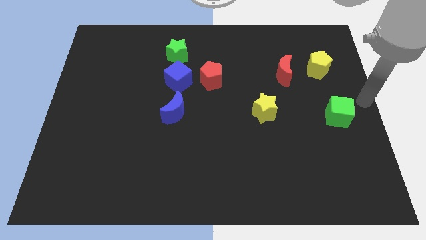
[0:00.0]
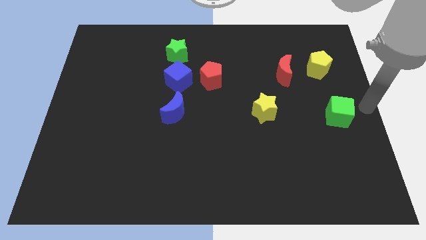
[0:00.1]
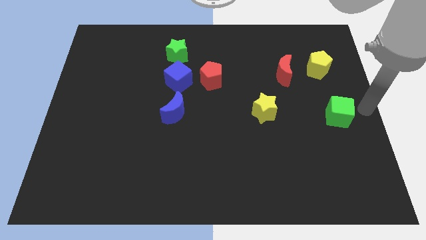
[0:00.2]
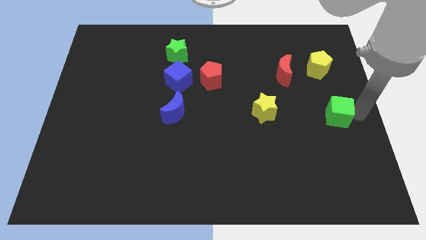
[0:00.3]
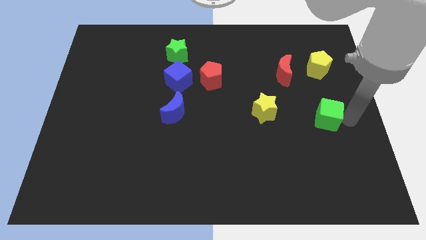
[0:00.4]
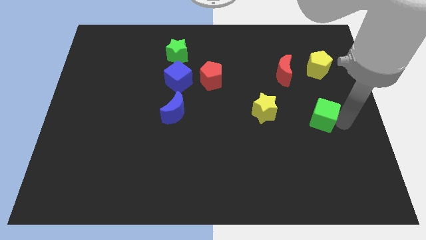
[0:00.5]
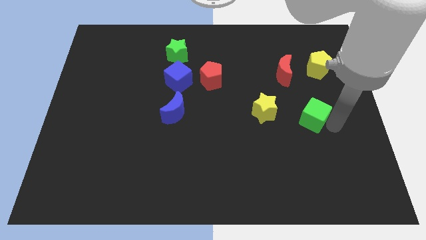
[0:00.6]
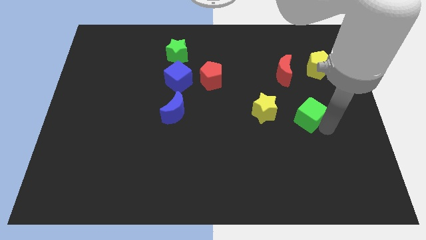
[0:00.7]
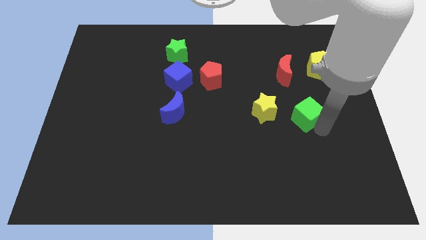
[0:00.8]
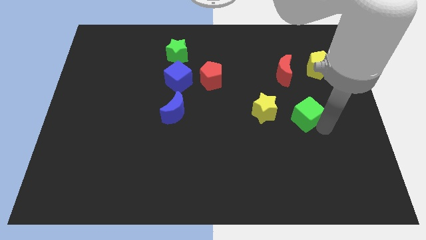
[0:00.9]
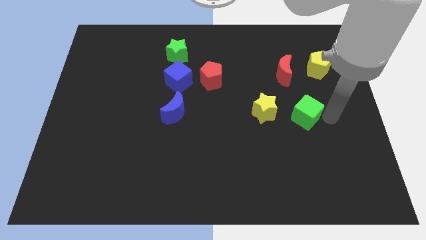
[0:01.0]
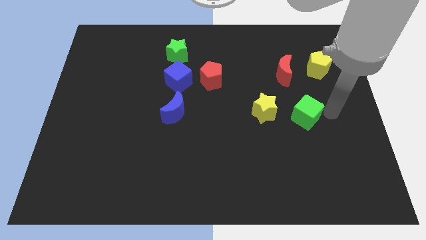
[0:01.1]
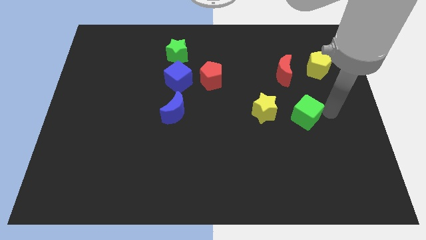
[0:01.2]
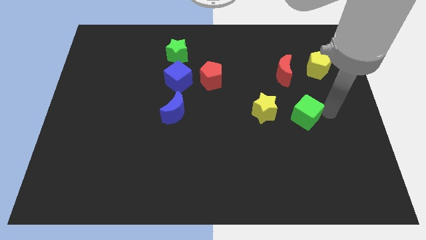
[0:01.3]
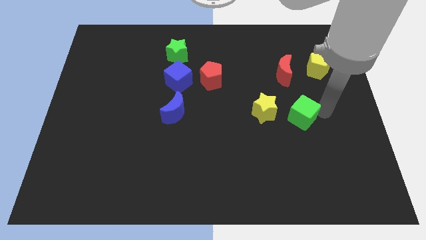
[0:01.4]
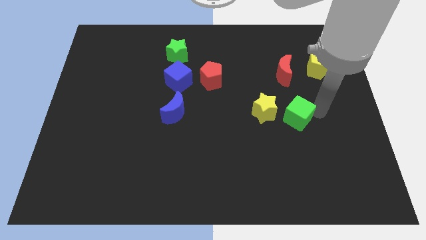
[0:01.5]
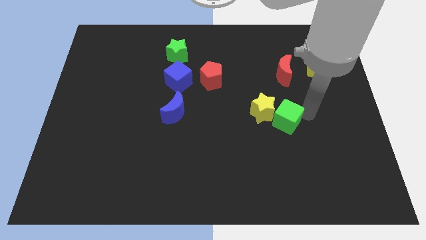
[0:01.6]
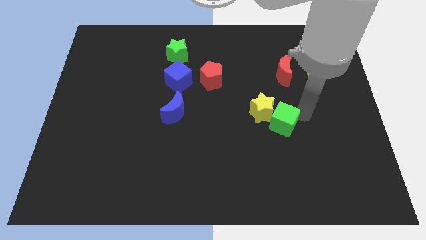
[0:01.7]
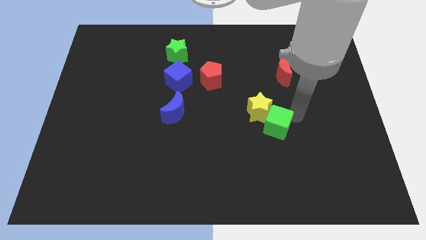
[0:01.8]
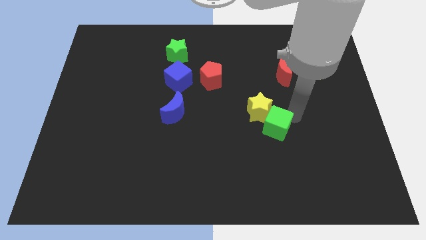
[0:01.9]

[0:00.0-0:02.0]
push the green cube into the yellow star

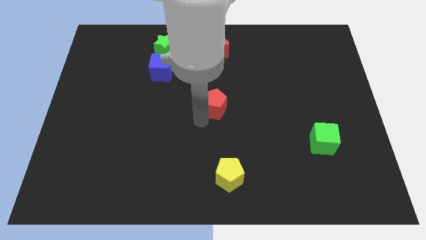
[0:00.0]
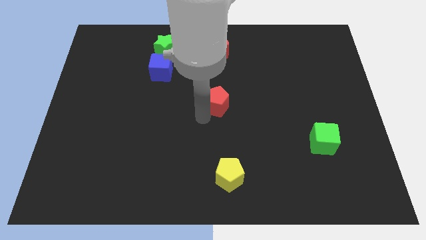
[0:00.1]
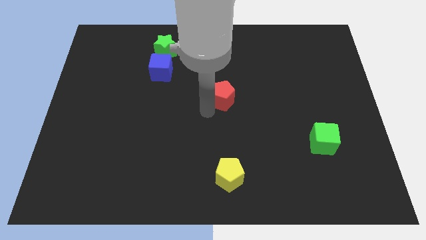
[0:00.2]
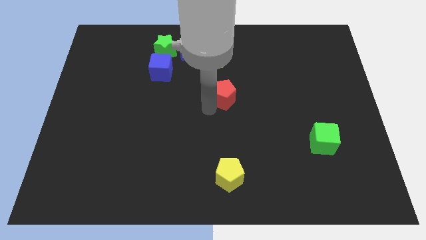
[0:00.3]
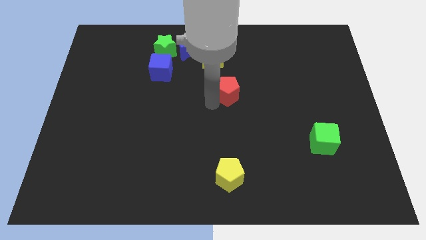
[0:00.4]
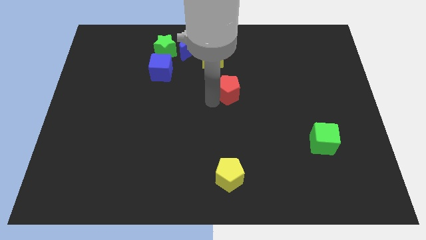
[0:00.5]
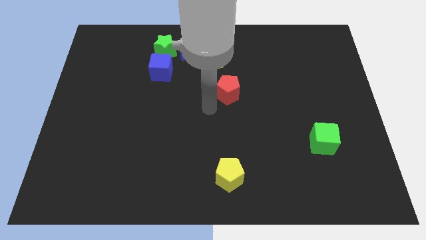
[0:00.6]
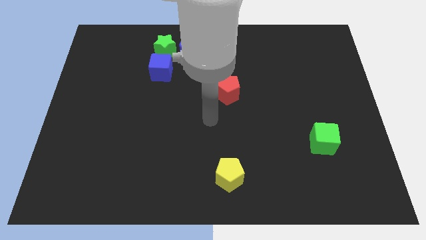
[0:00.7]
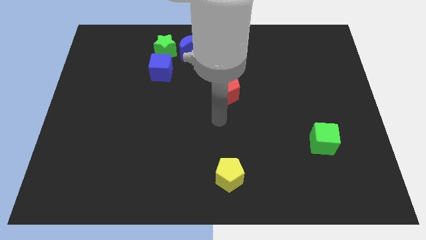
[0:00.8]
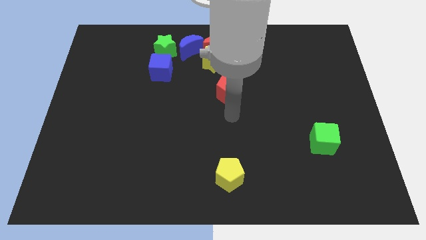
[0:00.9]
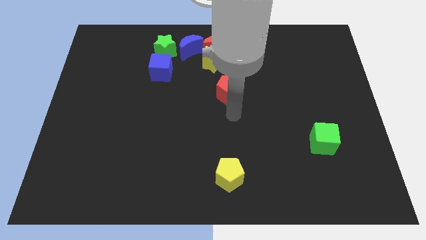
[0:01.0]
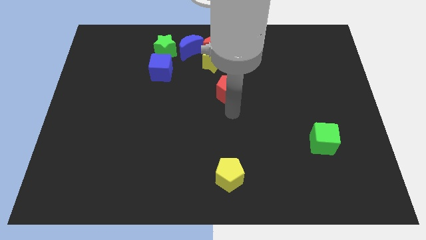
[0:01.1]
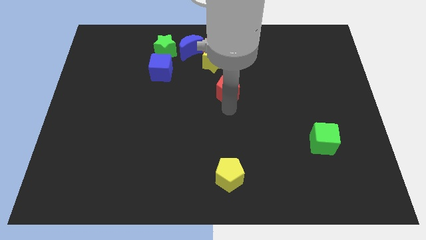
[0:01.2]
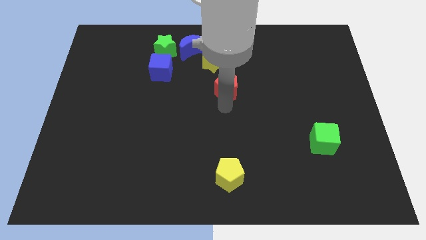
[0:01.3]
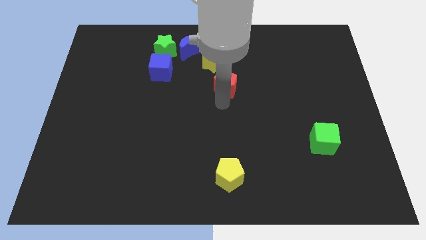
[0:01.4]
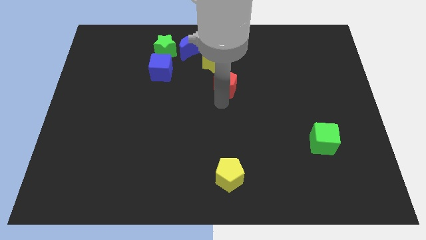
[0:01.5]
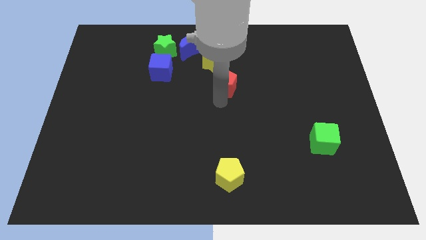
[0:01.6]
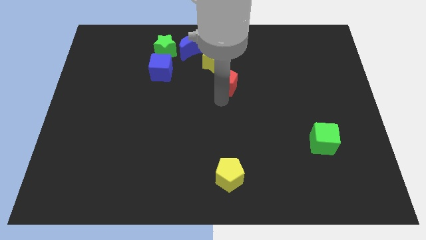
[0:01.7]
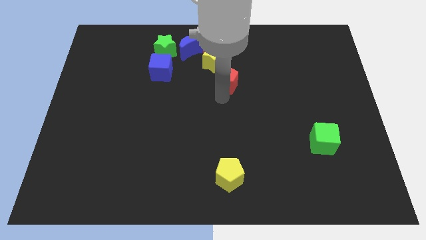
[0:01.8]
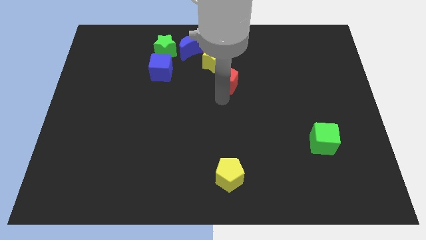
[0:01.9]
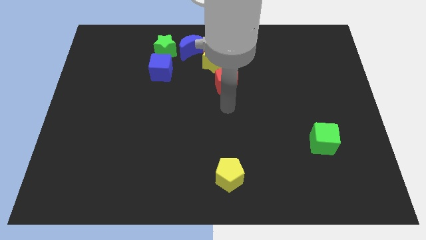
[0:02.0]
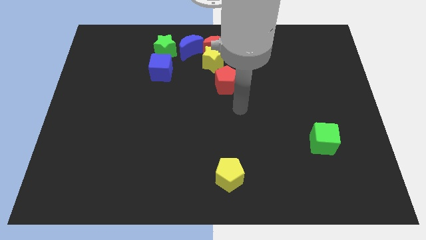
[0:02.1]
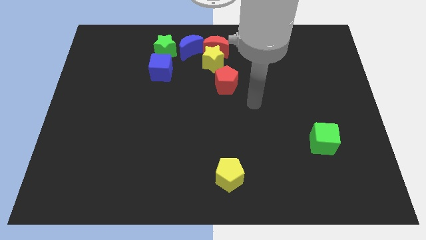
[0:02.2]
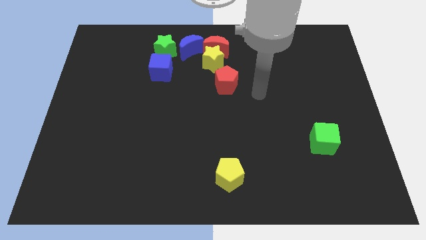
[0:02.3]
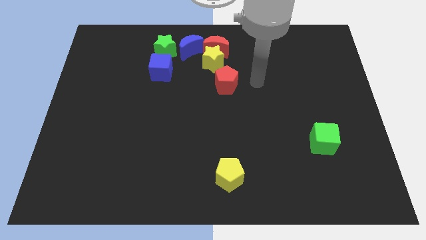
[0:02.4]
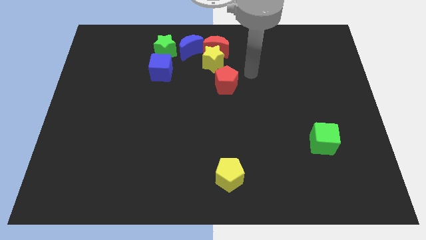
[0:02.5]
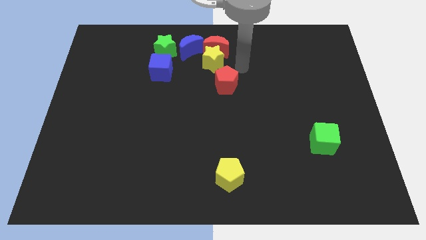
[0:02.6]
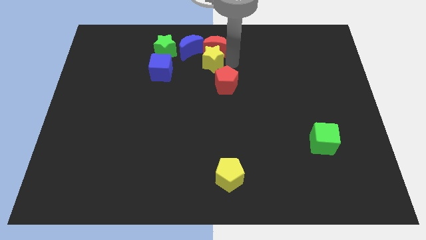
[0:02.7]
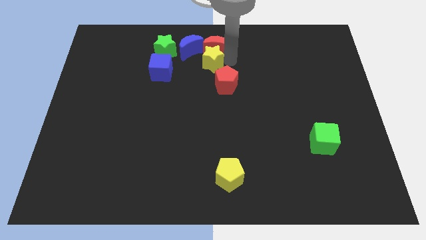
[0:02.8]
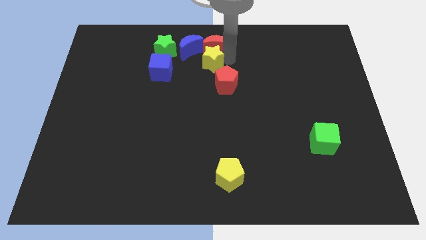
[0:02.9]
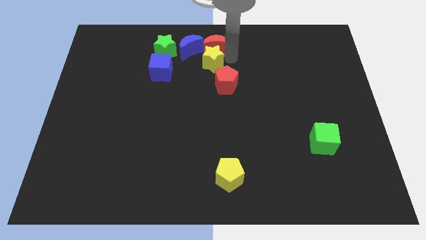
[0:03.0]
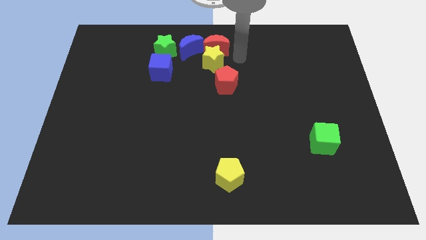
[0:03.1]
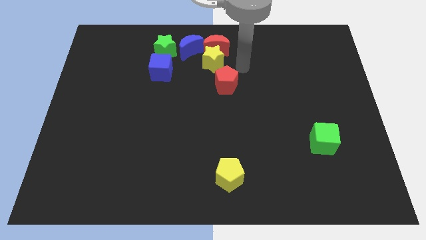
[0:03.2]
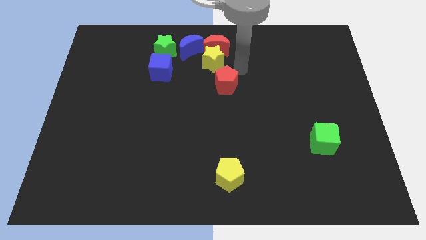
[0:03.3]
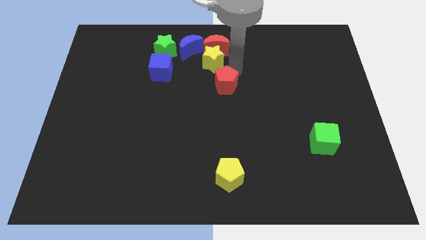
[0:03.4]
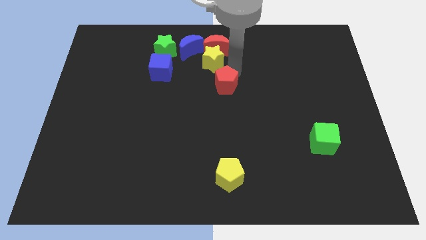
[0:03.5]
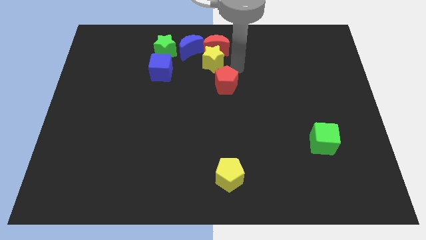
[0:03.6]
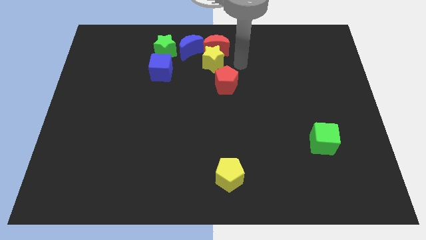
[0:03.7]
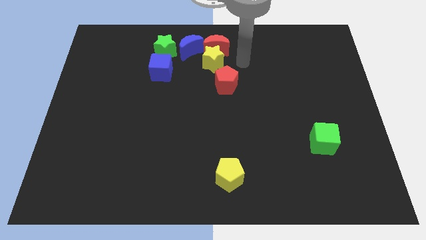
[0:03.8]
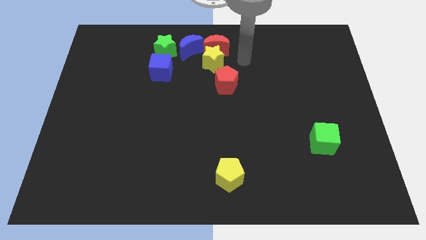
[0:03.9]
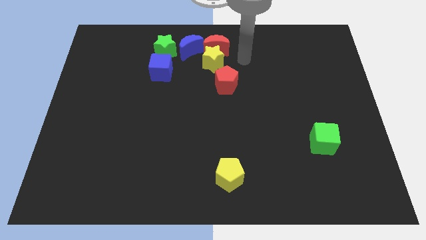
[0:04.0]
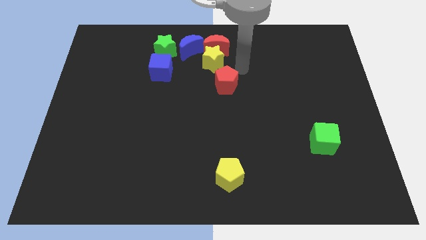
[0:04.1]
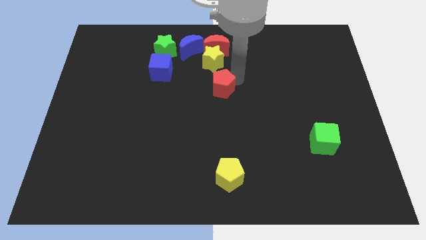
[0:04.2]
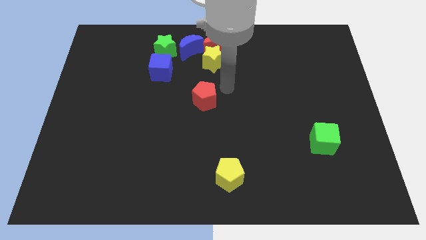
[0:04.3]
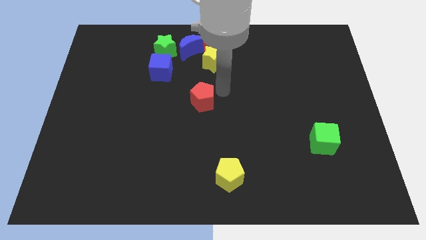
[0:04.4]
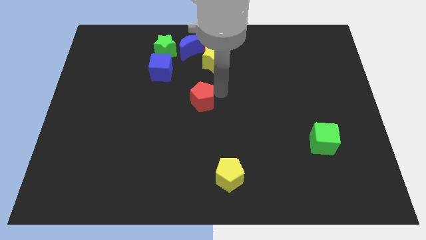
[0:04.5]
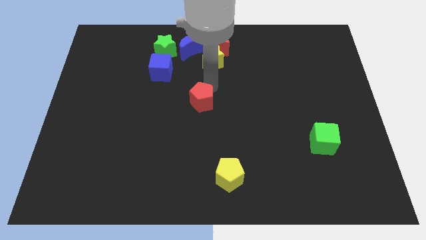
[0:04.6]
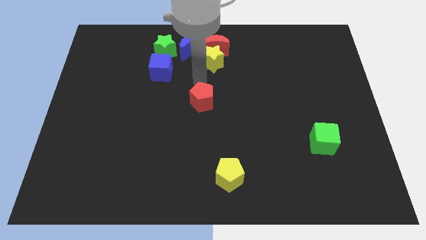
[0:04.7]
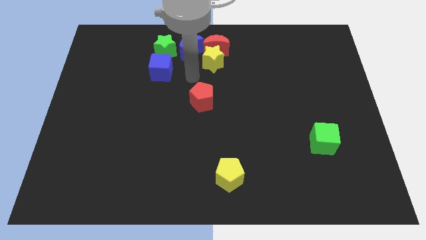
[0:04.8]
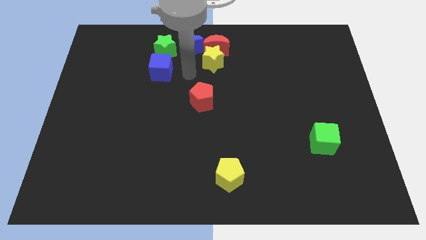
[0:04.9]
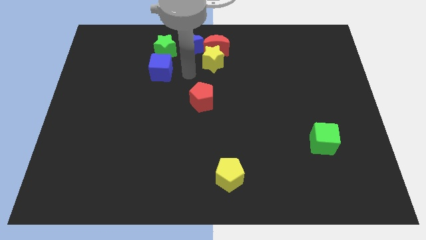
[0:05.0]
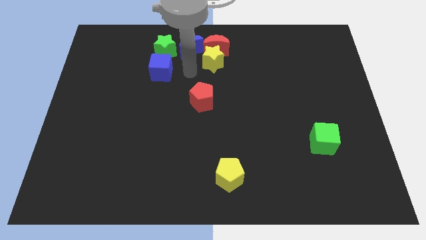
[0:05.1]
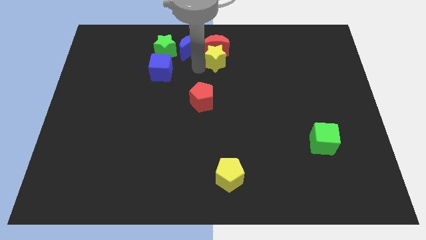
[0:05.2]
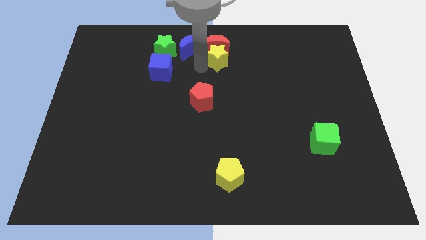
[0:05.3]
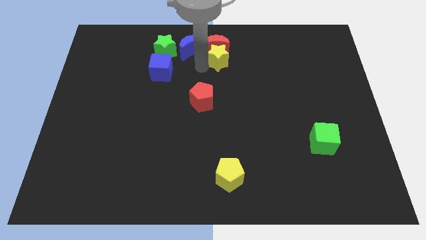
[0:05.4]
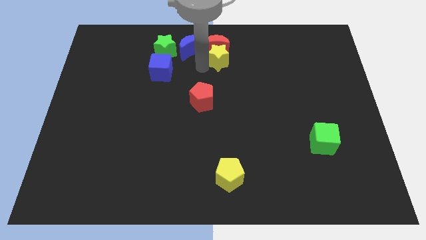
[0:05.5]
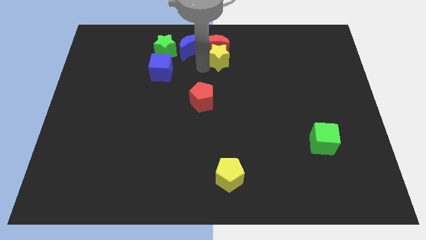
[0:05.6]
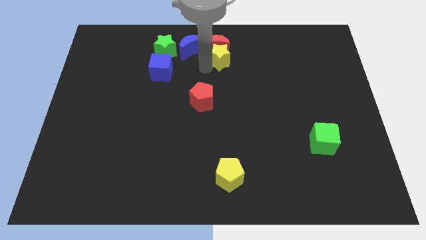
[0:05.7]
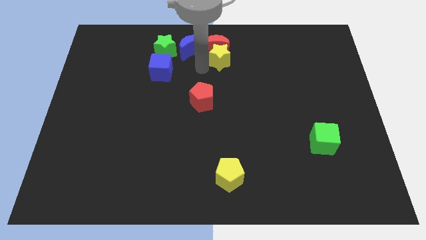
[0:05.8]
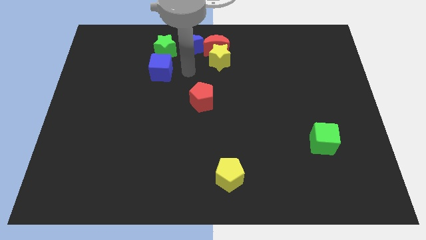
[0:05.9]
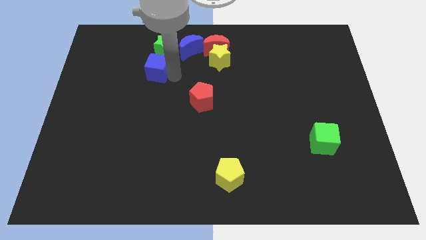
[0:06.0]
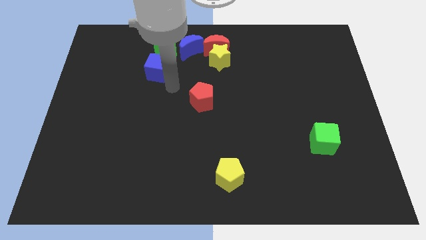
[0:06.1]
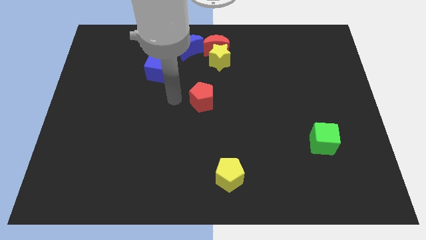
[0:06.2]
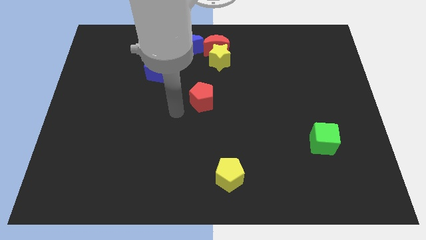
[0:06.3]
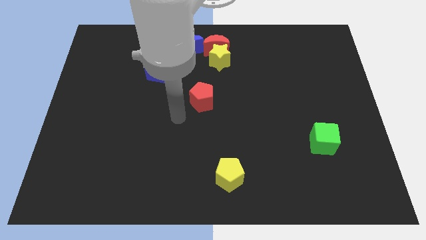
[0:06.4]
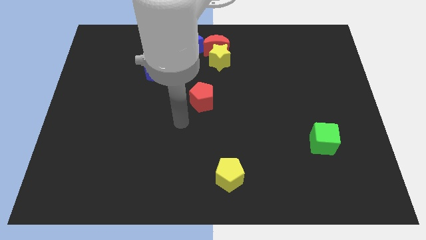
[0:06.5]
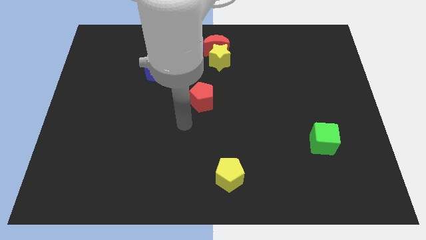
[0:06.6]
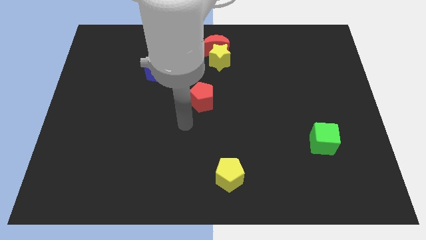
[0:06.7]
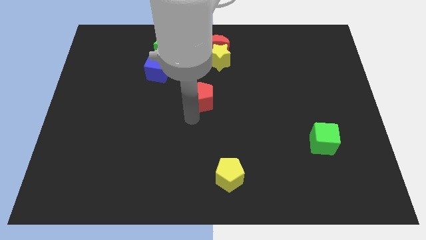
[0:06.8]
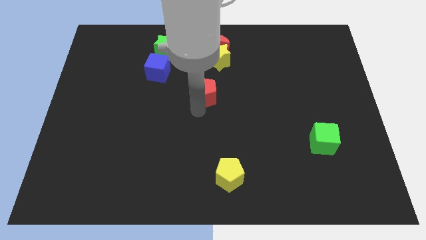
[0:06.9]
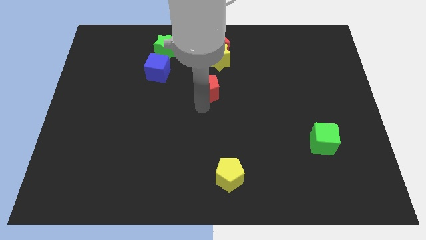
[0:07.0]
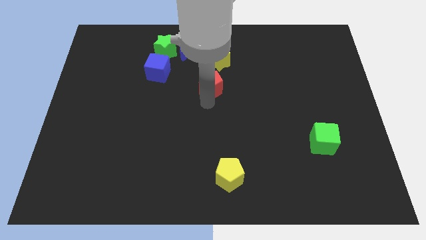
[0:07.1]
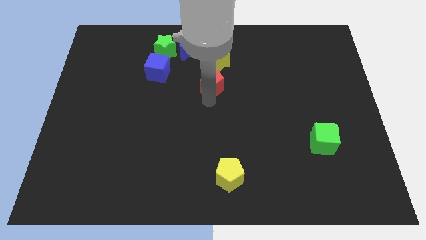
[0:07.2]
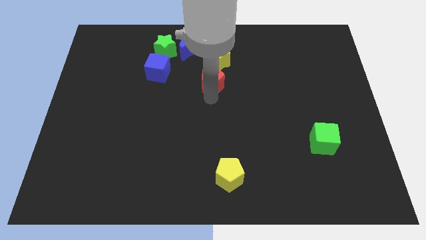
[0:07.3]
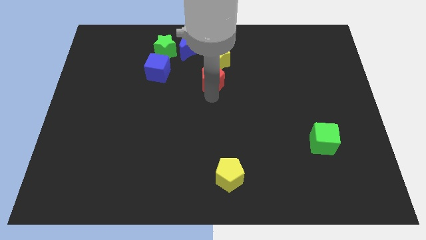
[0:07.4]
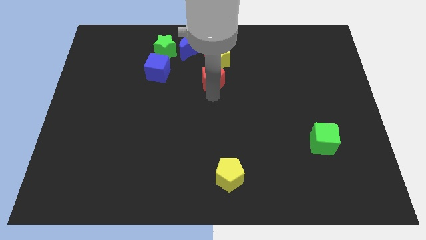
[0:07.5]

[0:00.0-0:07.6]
place the red pentagon below the yellow star
